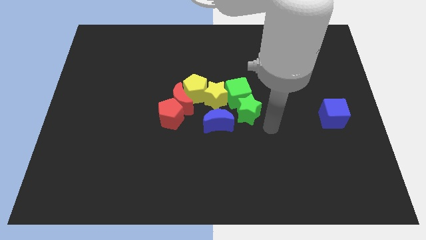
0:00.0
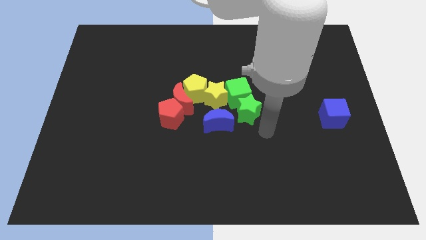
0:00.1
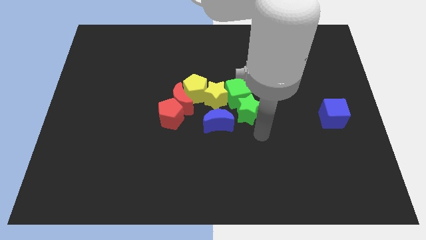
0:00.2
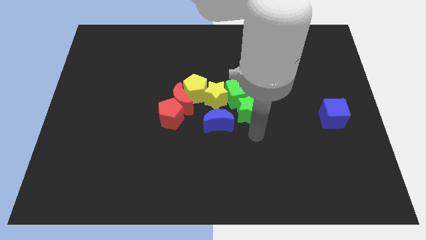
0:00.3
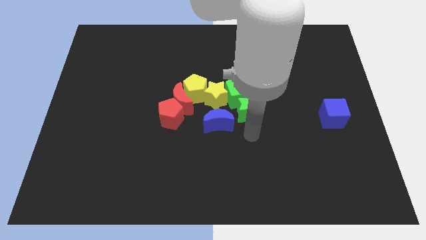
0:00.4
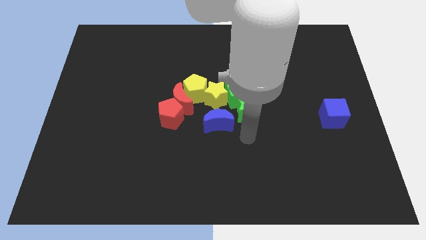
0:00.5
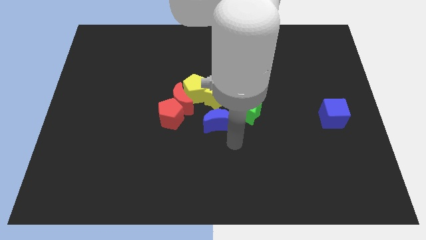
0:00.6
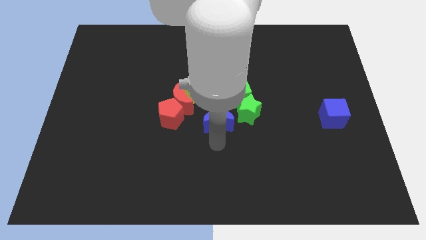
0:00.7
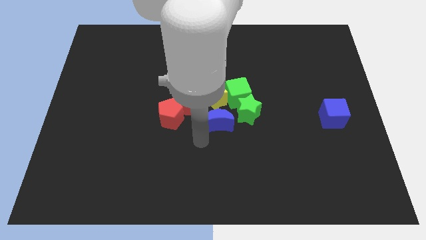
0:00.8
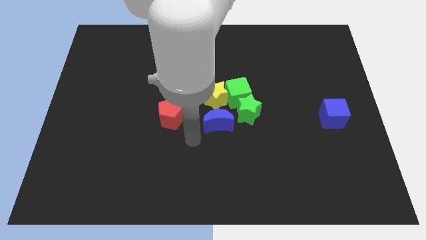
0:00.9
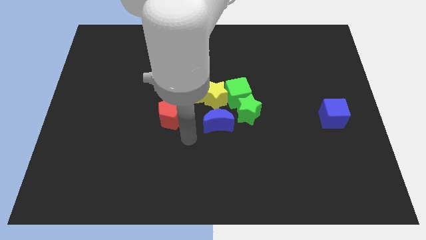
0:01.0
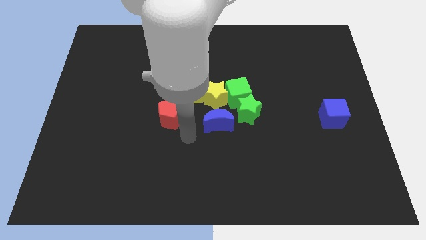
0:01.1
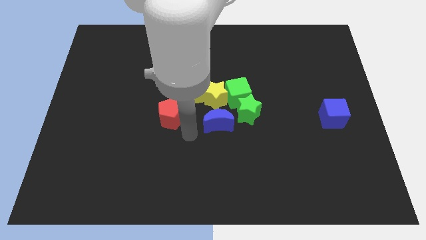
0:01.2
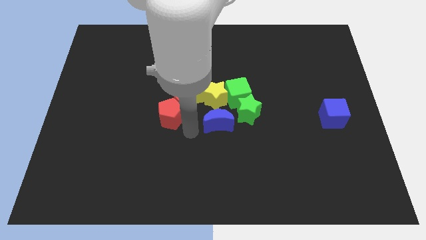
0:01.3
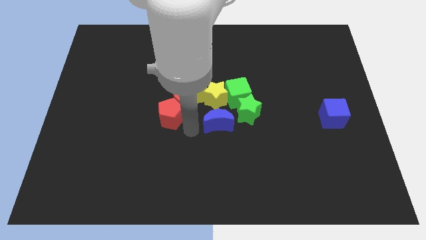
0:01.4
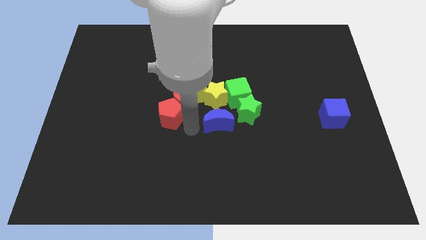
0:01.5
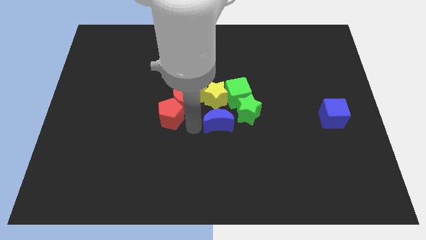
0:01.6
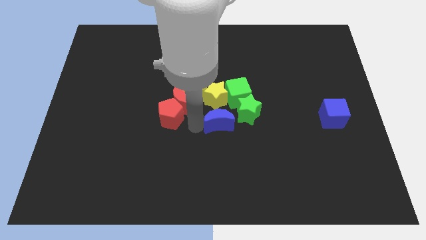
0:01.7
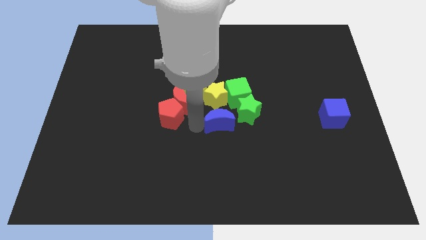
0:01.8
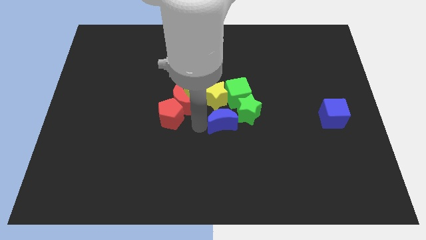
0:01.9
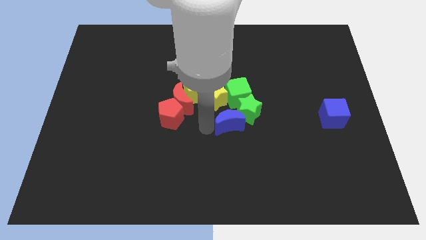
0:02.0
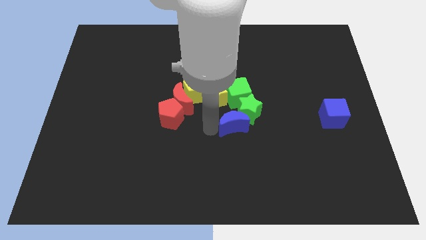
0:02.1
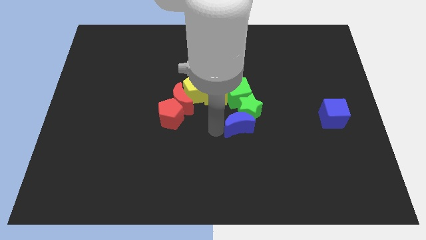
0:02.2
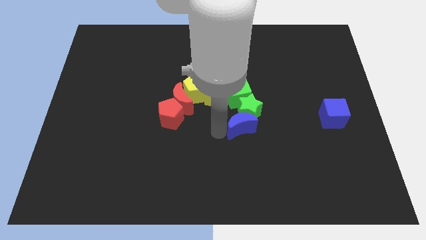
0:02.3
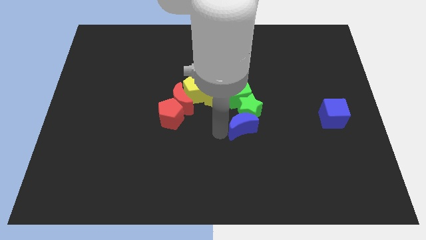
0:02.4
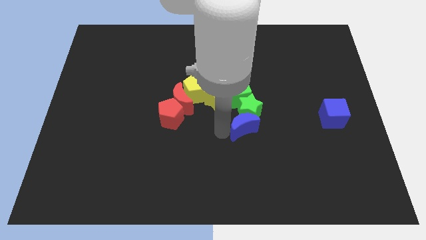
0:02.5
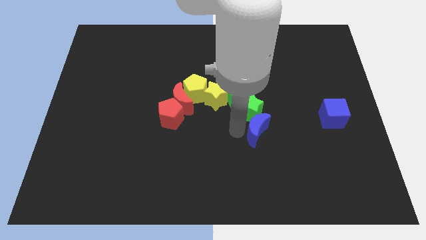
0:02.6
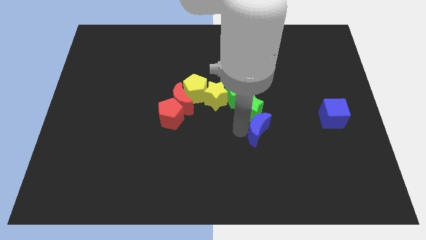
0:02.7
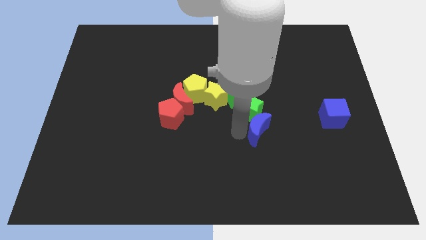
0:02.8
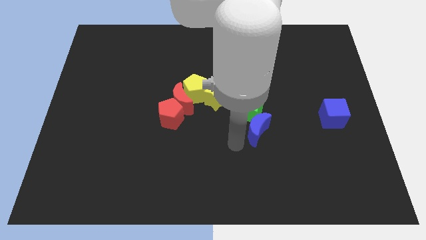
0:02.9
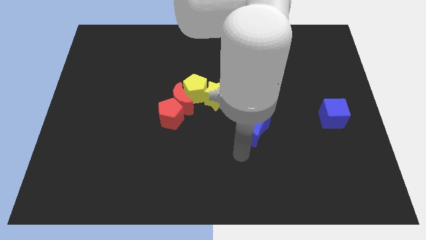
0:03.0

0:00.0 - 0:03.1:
place the blue crescent to the bottom of the green star

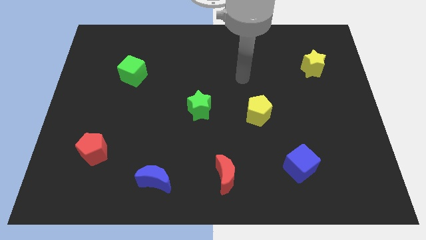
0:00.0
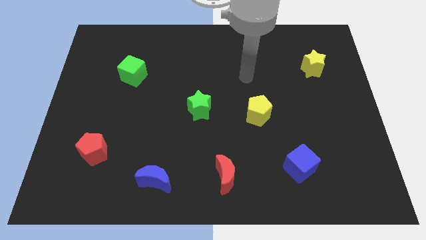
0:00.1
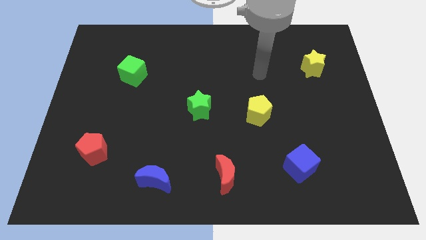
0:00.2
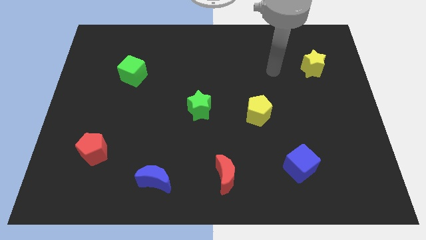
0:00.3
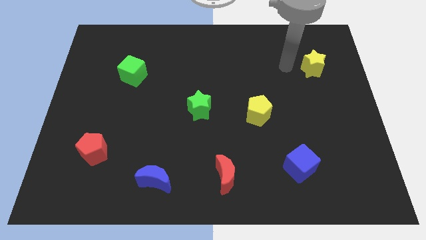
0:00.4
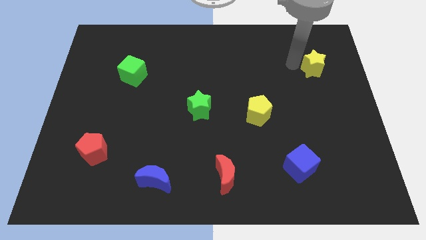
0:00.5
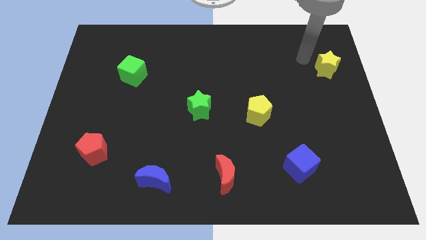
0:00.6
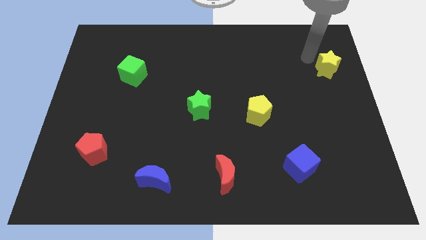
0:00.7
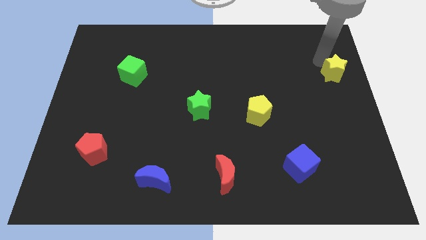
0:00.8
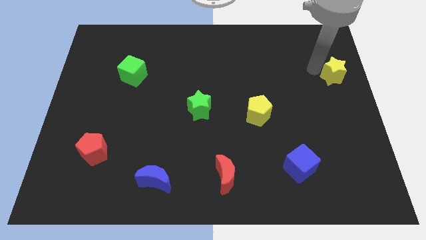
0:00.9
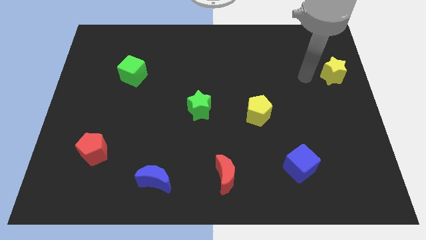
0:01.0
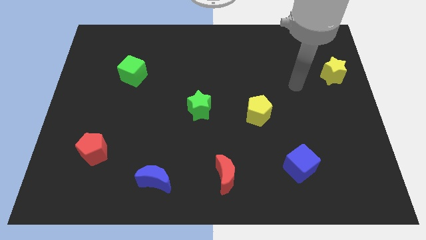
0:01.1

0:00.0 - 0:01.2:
push the yellow star slightly to the right side of the board

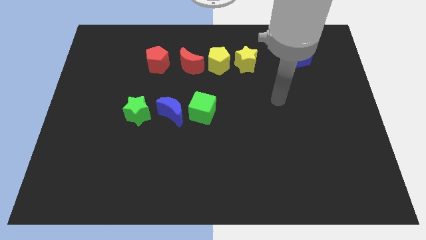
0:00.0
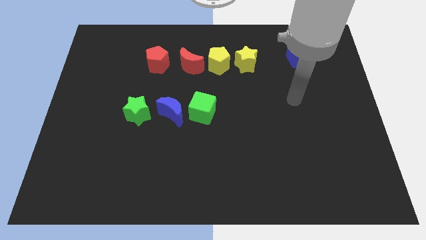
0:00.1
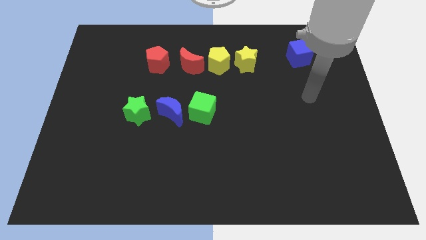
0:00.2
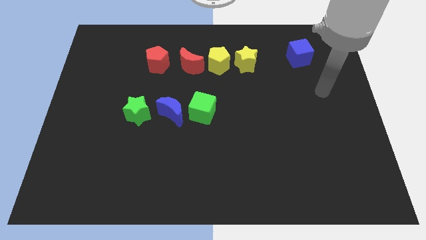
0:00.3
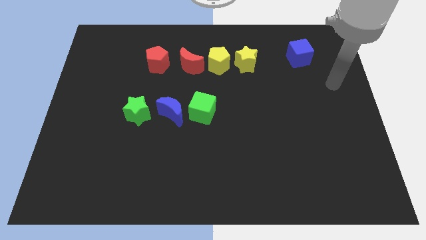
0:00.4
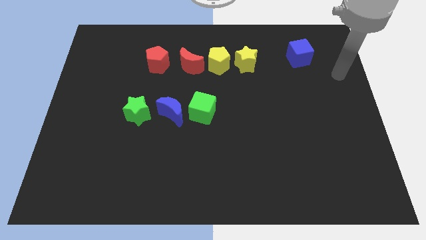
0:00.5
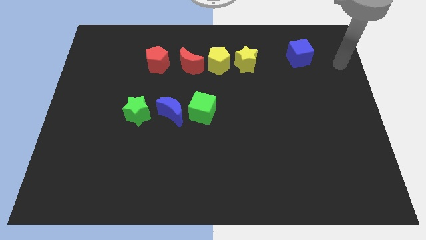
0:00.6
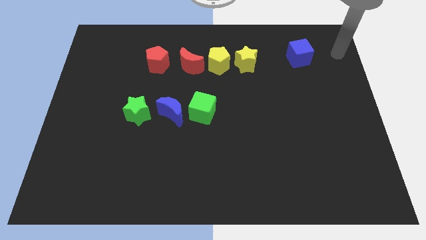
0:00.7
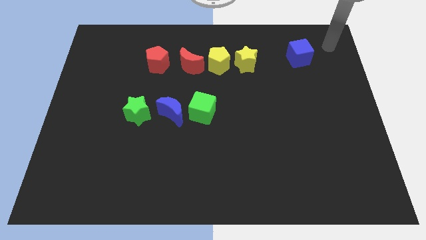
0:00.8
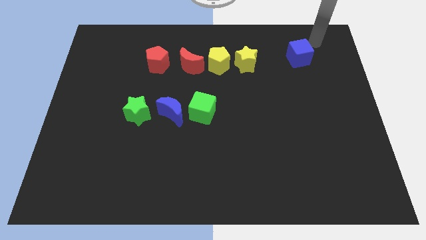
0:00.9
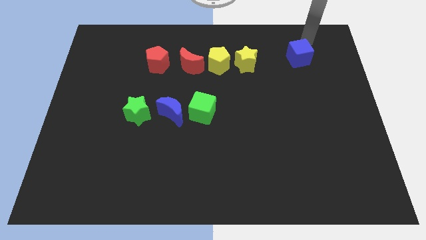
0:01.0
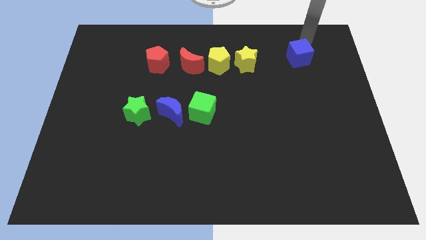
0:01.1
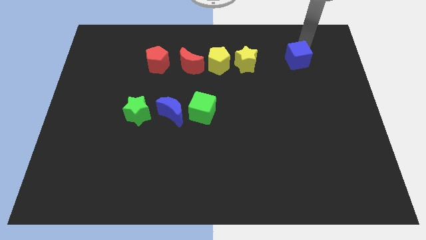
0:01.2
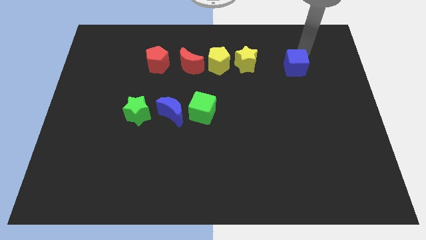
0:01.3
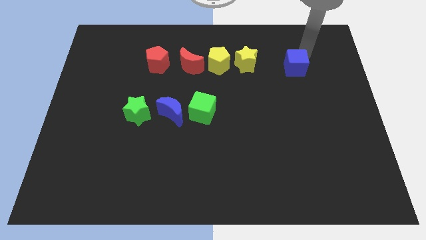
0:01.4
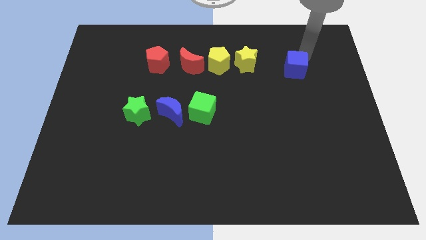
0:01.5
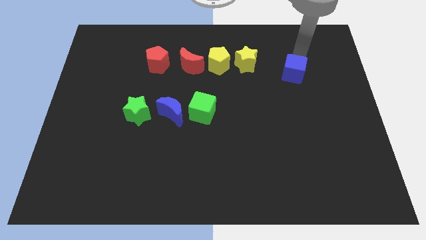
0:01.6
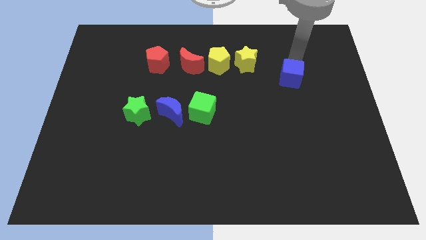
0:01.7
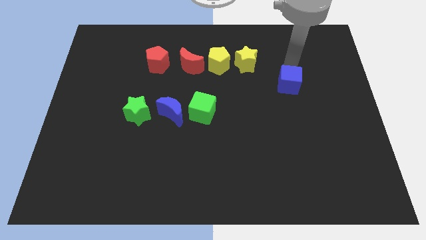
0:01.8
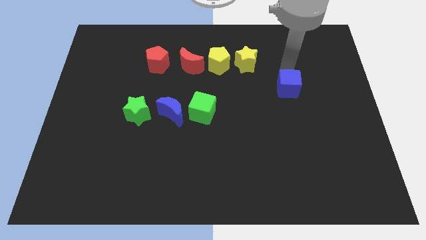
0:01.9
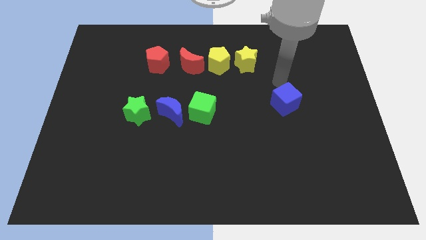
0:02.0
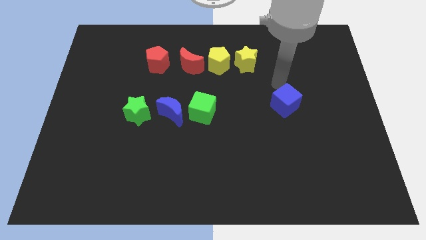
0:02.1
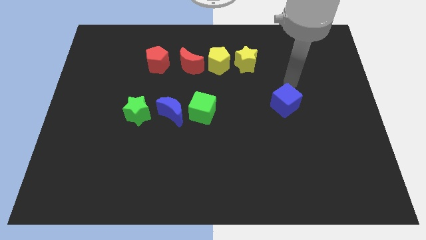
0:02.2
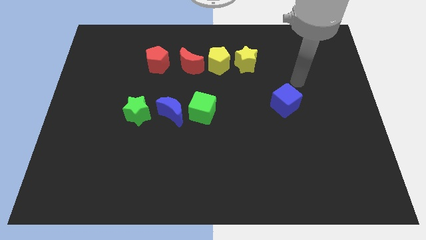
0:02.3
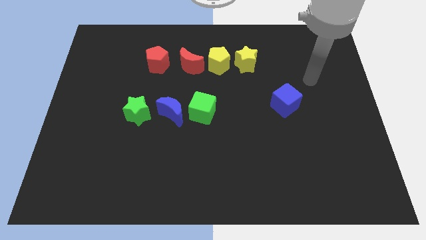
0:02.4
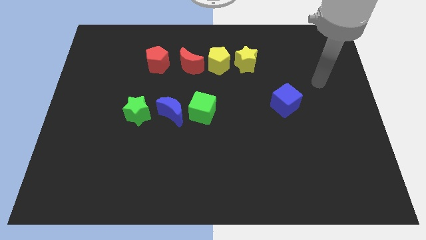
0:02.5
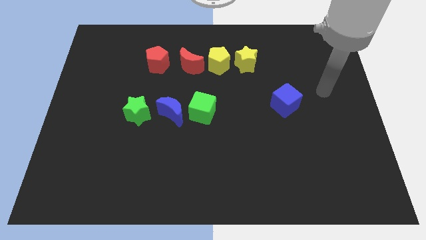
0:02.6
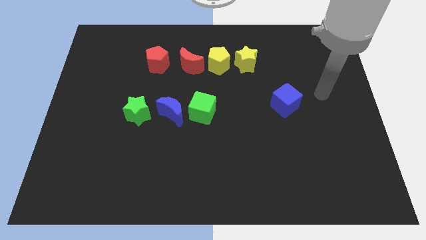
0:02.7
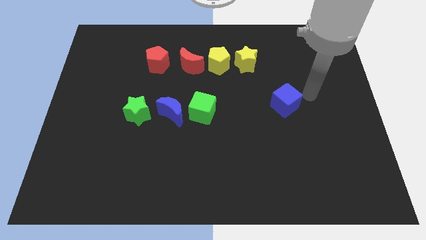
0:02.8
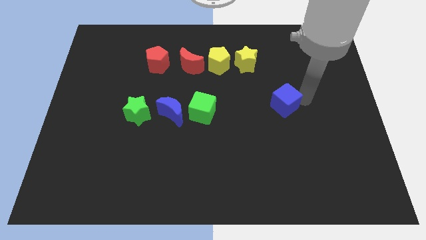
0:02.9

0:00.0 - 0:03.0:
place the blue cube parallel to green cube

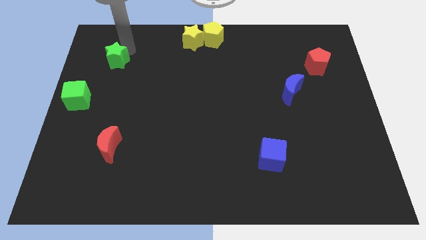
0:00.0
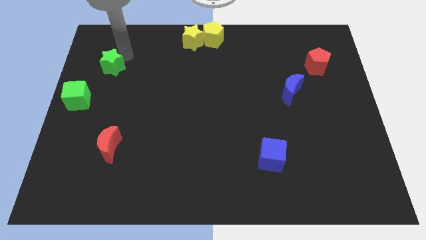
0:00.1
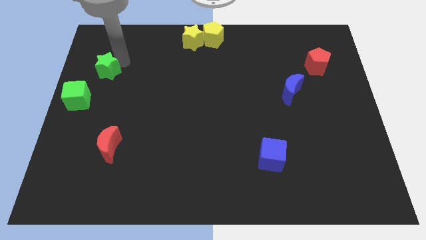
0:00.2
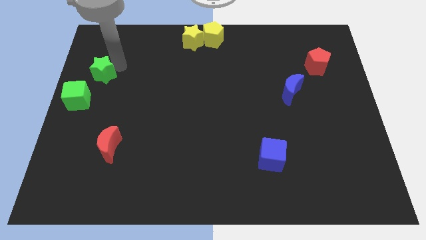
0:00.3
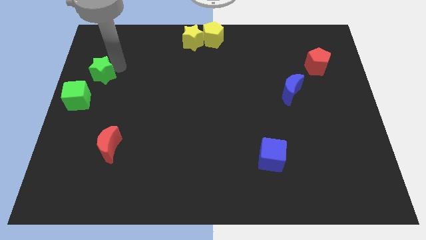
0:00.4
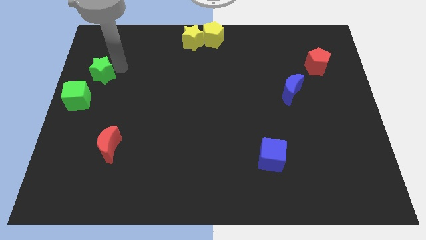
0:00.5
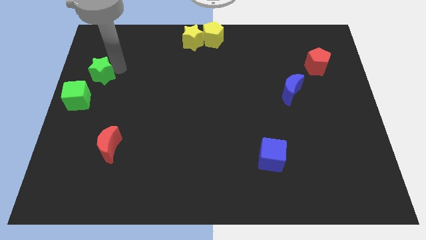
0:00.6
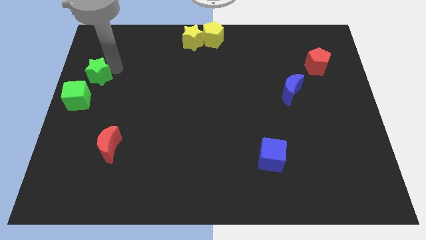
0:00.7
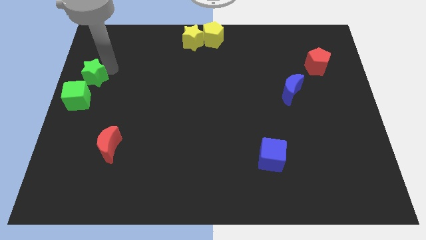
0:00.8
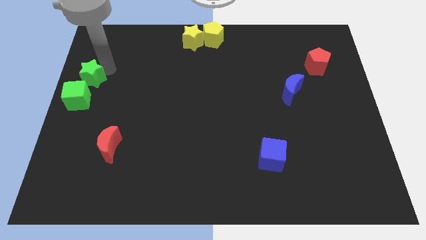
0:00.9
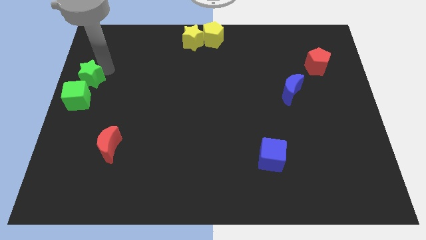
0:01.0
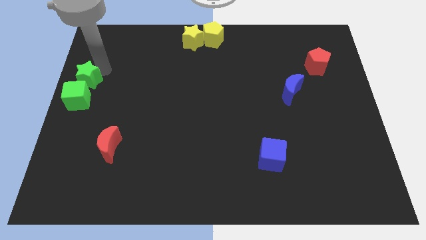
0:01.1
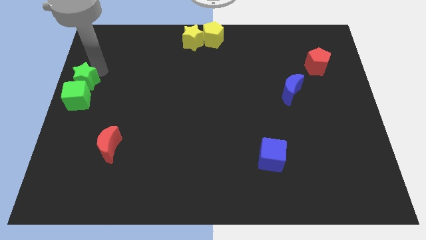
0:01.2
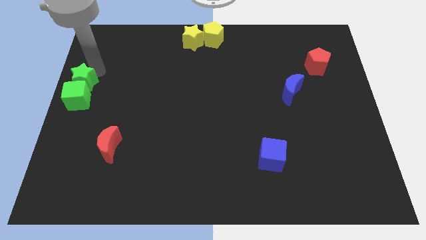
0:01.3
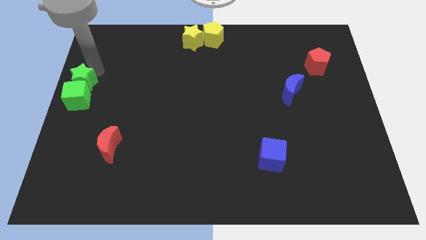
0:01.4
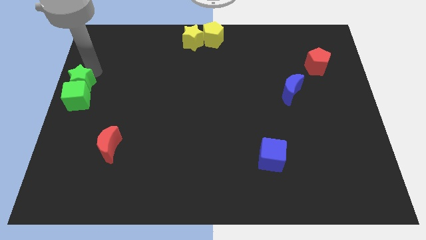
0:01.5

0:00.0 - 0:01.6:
place the green star above the green cube

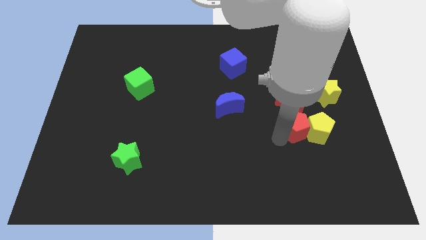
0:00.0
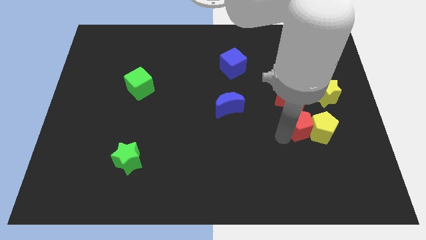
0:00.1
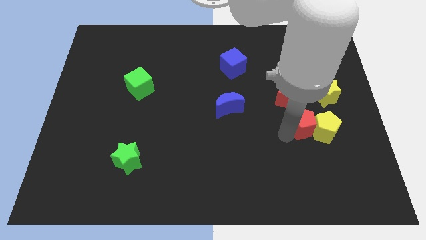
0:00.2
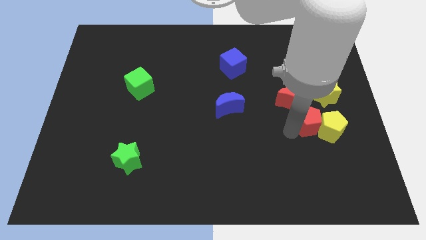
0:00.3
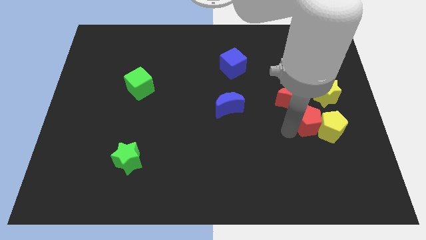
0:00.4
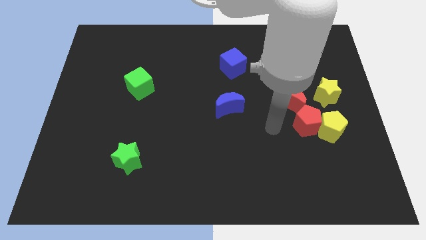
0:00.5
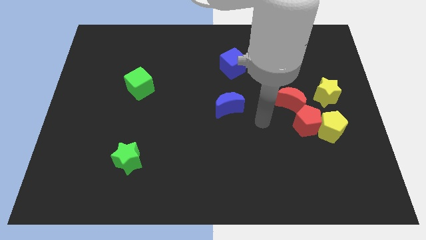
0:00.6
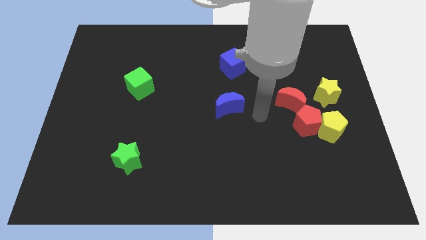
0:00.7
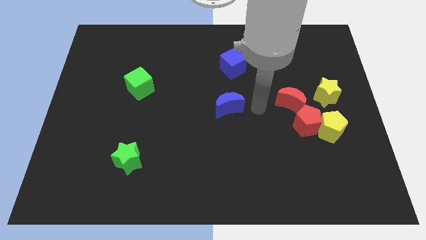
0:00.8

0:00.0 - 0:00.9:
move the red pentagon slightly towards the right
